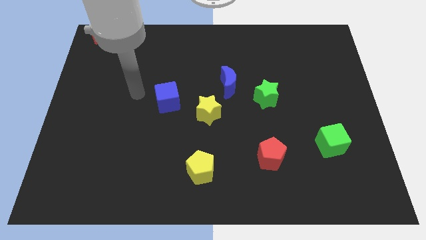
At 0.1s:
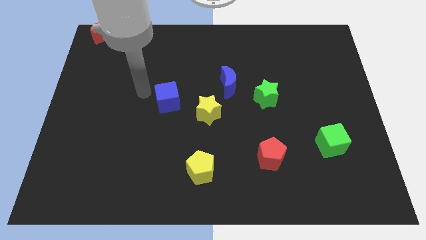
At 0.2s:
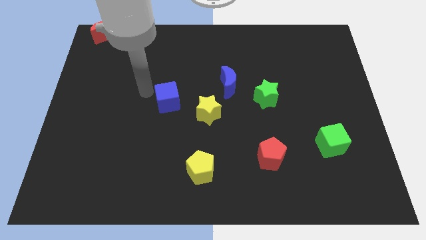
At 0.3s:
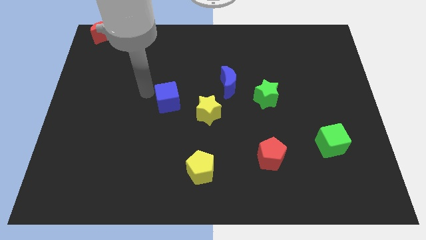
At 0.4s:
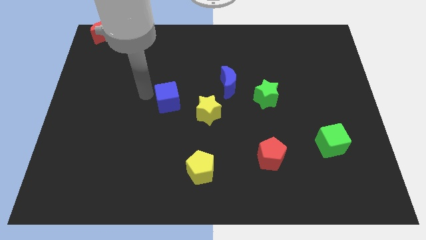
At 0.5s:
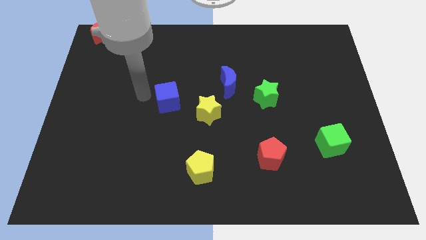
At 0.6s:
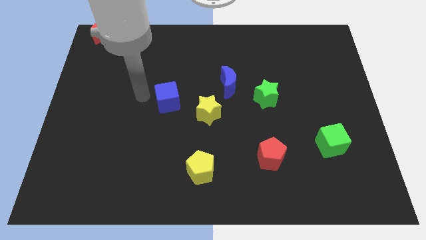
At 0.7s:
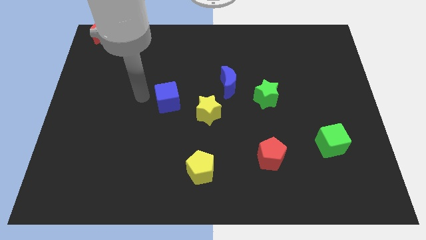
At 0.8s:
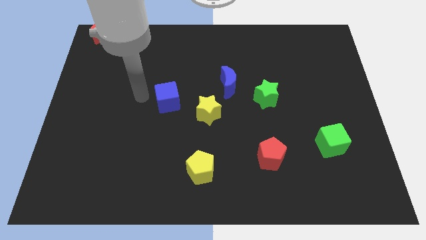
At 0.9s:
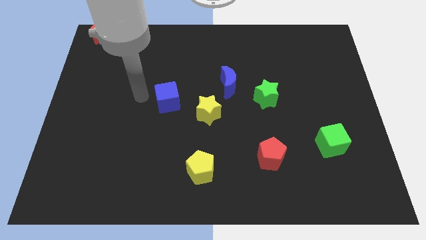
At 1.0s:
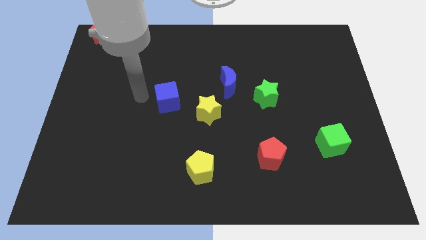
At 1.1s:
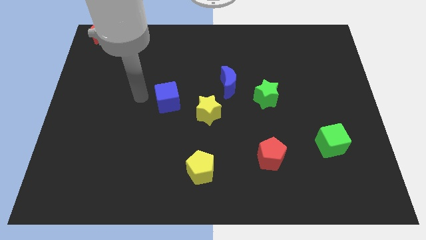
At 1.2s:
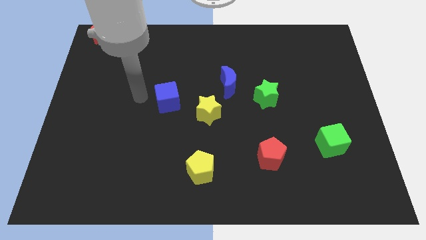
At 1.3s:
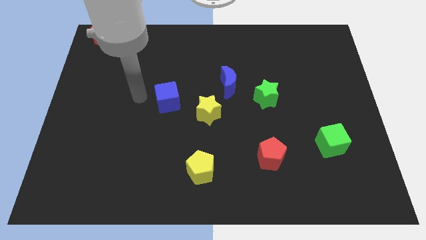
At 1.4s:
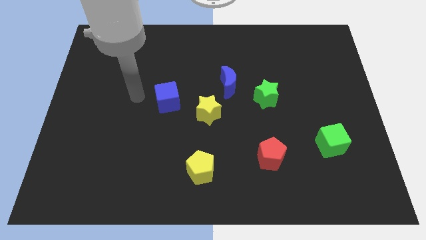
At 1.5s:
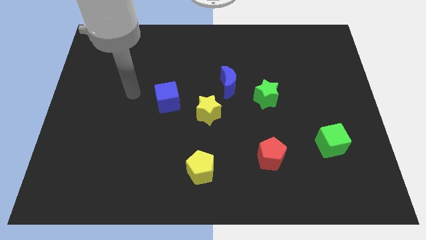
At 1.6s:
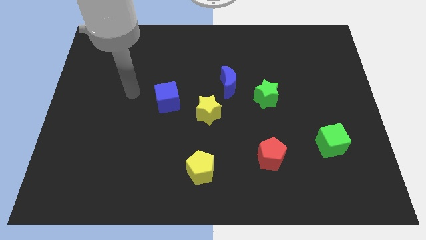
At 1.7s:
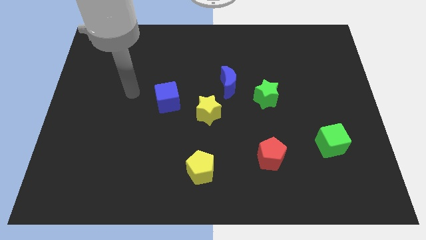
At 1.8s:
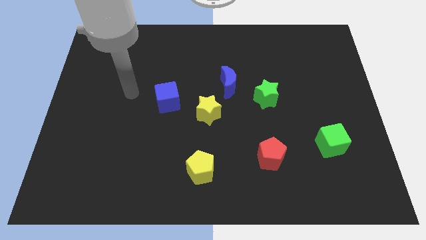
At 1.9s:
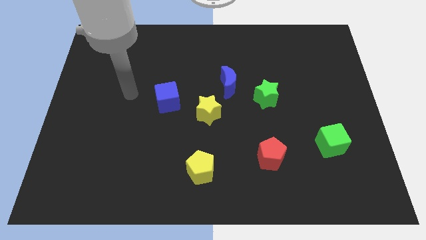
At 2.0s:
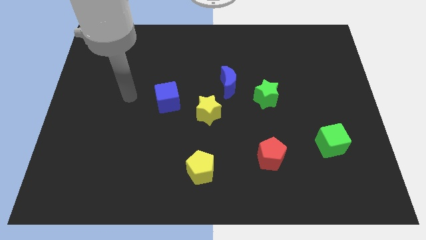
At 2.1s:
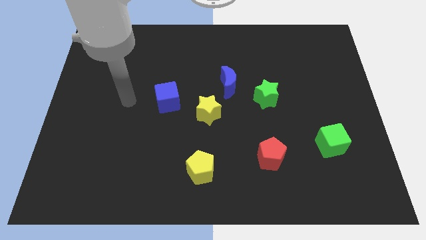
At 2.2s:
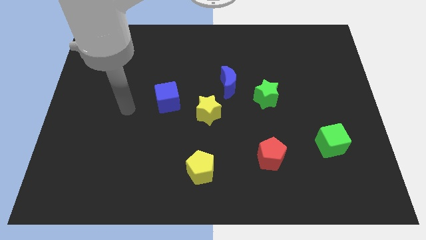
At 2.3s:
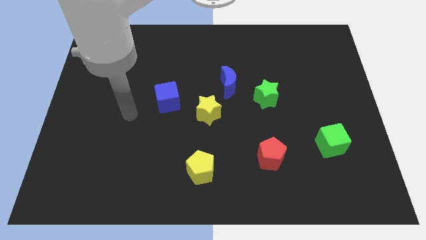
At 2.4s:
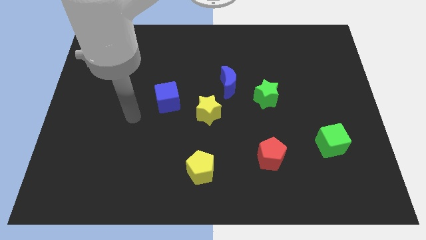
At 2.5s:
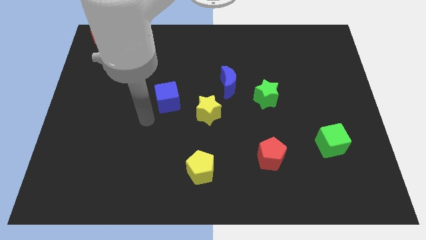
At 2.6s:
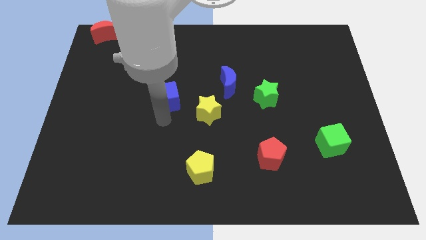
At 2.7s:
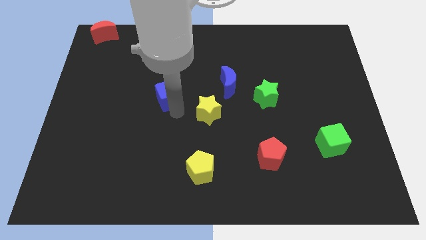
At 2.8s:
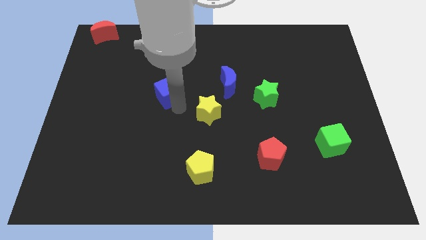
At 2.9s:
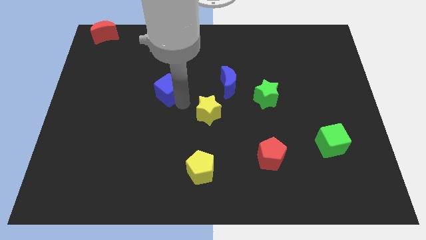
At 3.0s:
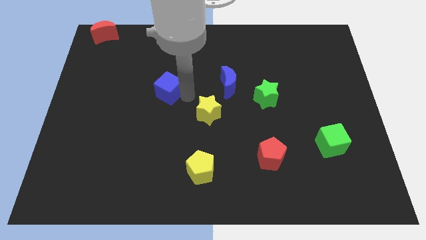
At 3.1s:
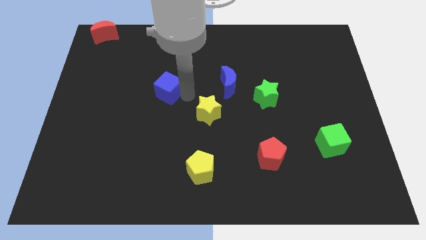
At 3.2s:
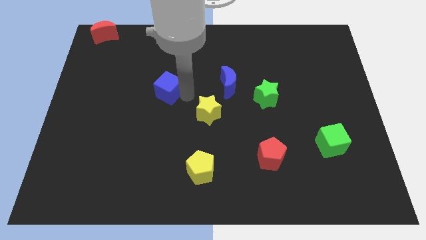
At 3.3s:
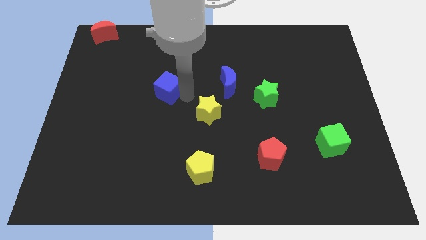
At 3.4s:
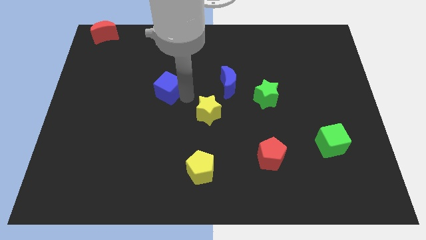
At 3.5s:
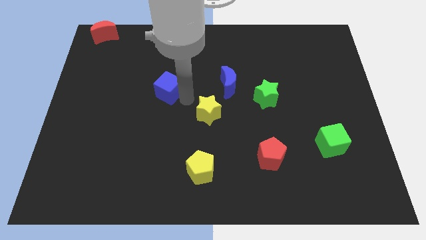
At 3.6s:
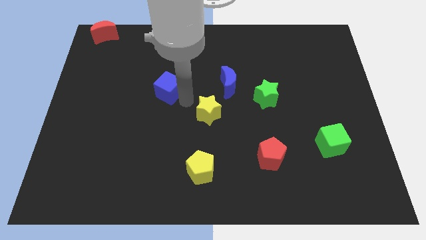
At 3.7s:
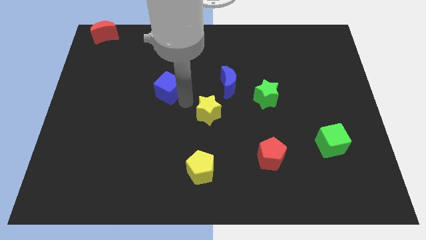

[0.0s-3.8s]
push the blue cube to the top left of the yellow star

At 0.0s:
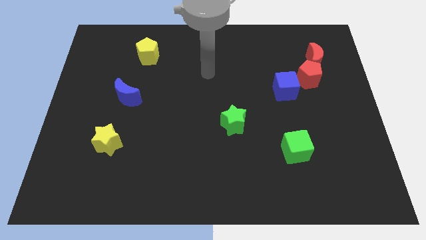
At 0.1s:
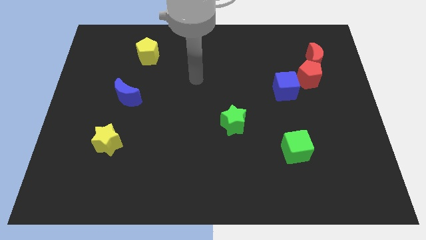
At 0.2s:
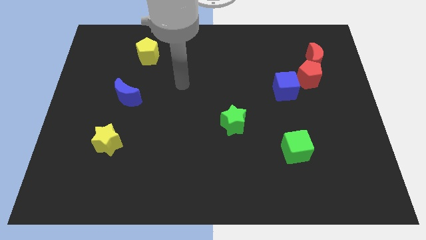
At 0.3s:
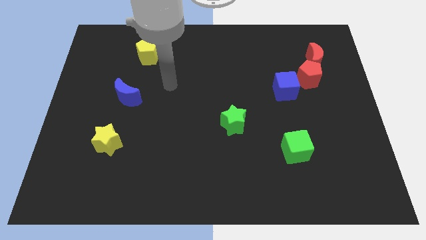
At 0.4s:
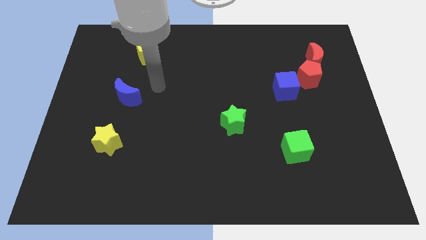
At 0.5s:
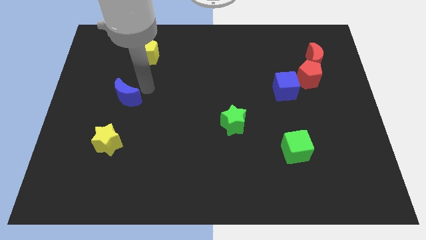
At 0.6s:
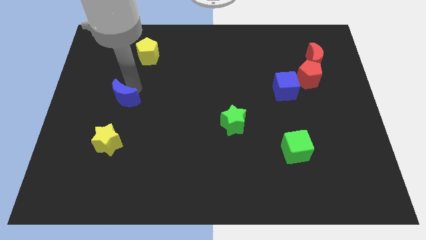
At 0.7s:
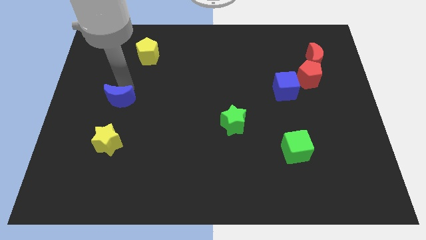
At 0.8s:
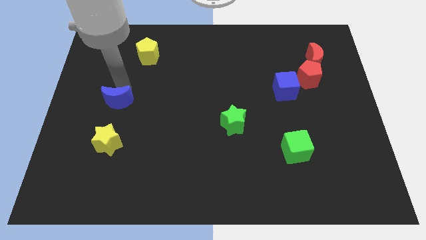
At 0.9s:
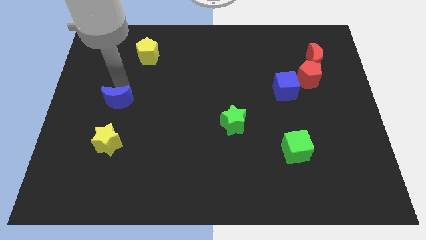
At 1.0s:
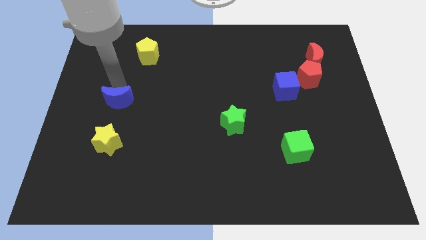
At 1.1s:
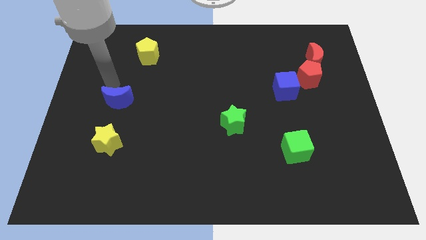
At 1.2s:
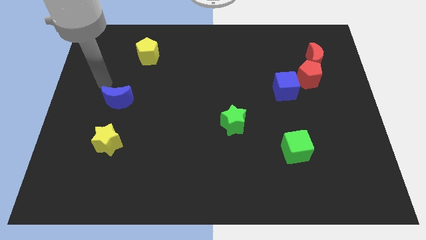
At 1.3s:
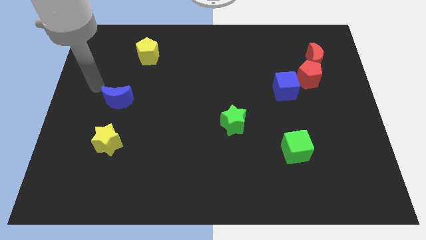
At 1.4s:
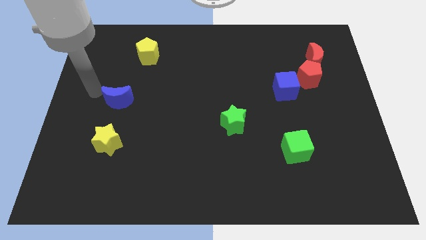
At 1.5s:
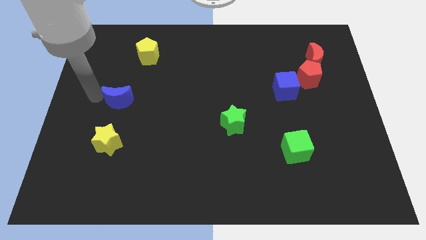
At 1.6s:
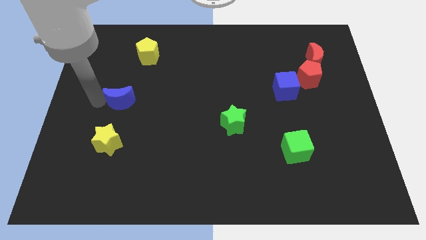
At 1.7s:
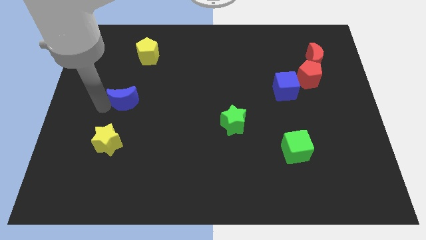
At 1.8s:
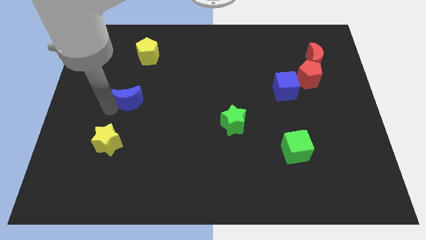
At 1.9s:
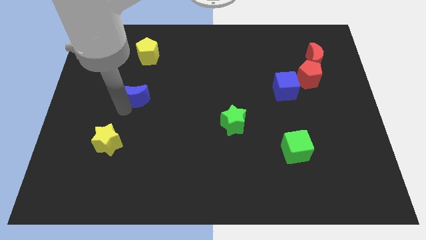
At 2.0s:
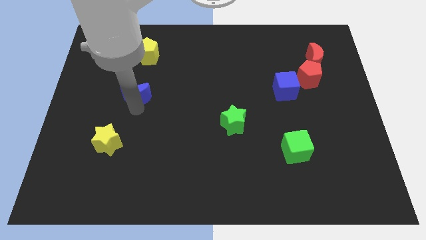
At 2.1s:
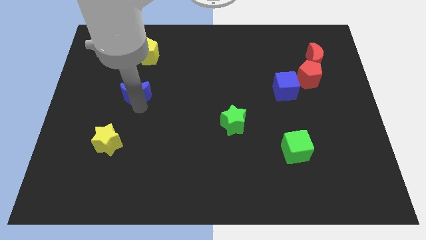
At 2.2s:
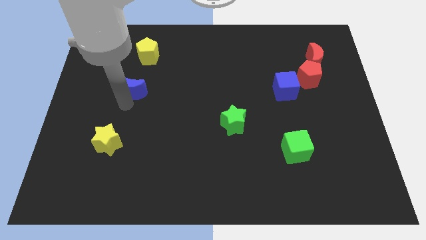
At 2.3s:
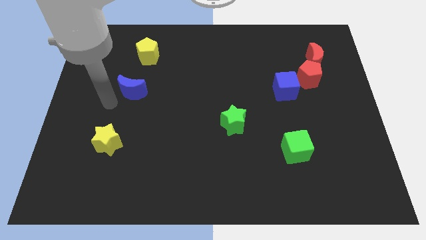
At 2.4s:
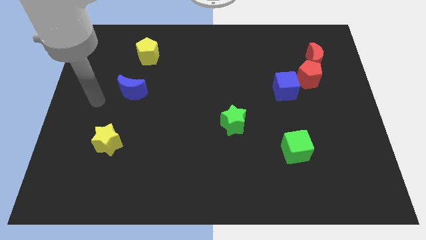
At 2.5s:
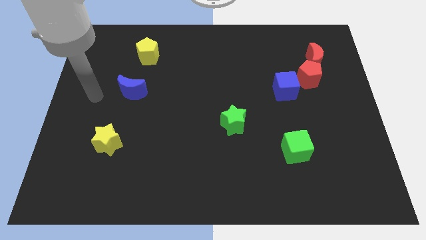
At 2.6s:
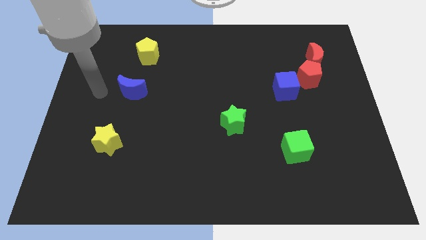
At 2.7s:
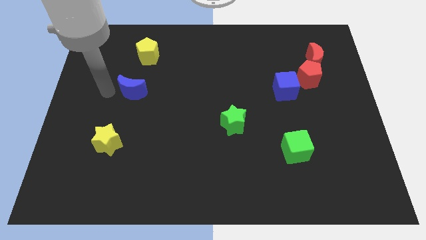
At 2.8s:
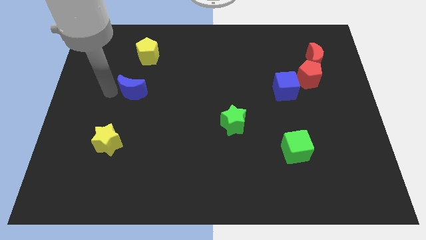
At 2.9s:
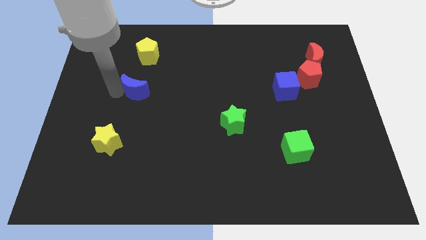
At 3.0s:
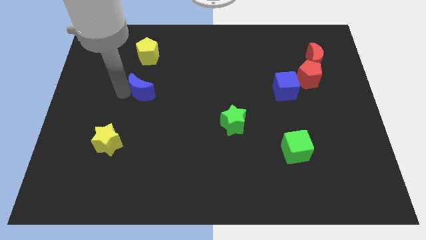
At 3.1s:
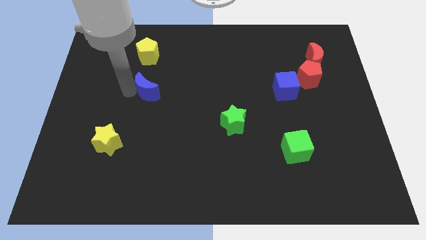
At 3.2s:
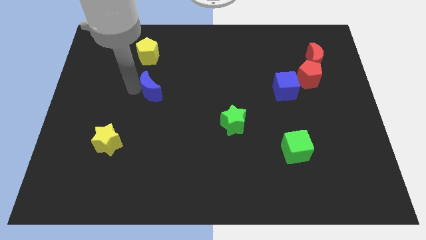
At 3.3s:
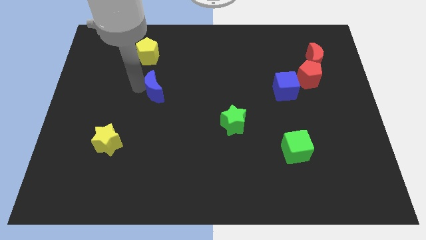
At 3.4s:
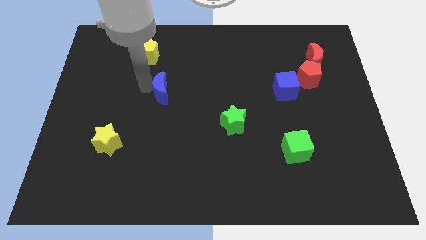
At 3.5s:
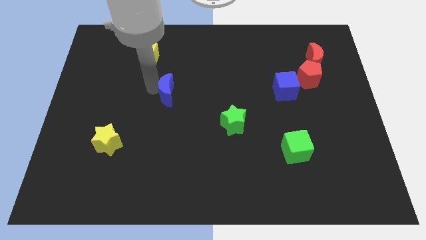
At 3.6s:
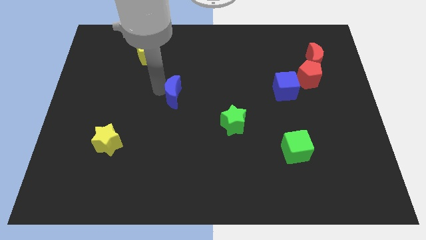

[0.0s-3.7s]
slide the blue moon diagonally bottom right to the yellow pentagon

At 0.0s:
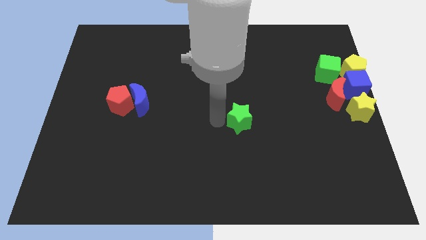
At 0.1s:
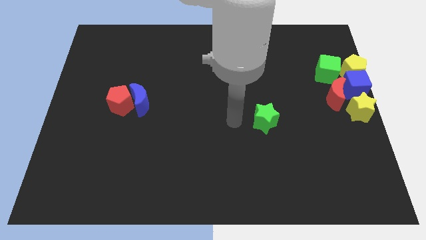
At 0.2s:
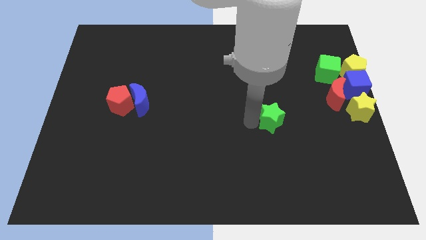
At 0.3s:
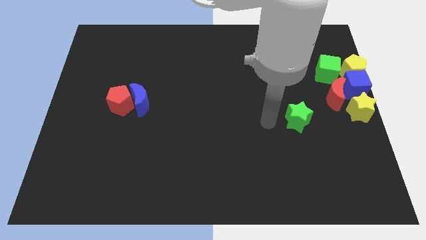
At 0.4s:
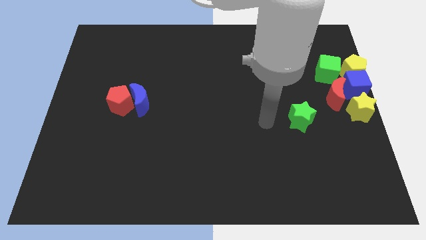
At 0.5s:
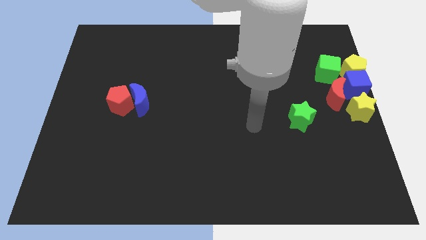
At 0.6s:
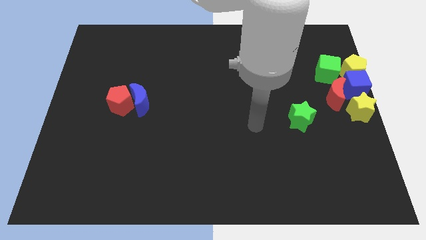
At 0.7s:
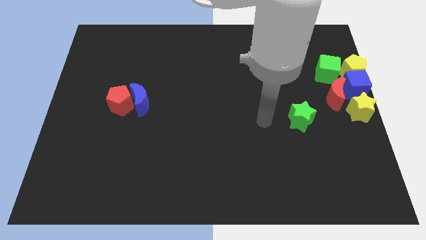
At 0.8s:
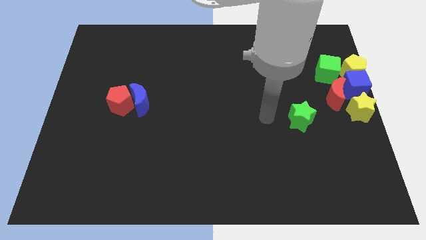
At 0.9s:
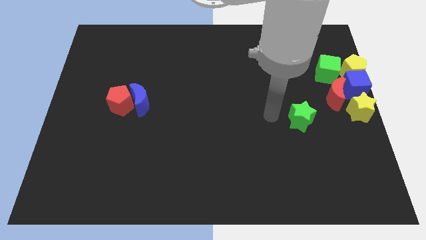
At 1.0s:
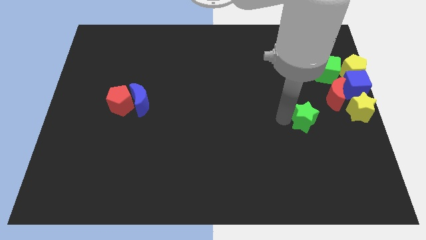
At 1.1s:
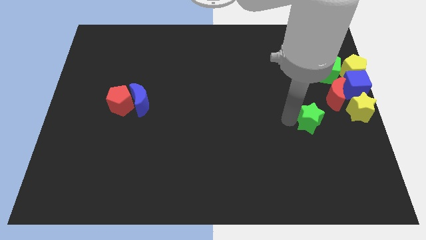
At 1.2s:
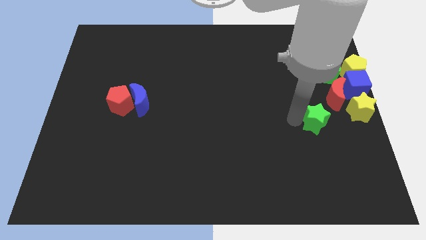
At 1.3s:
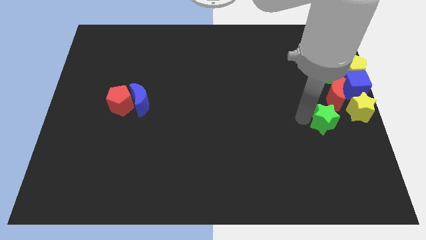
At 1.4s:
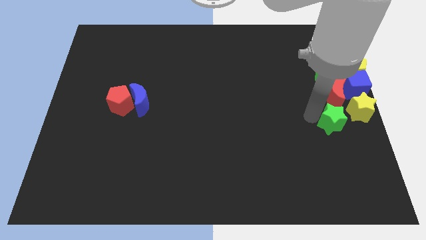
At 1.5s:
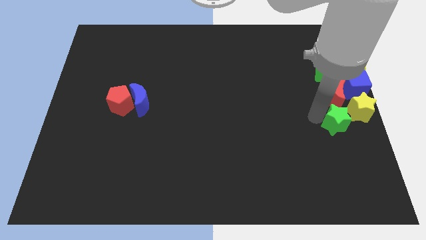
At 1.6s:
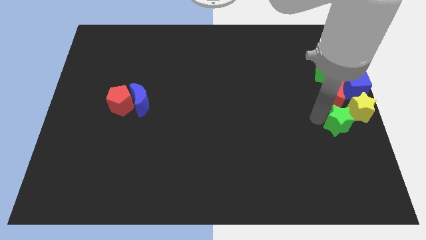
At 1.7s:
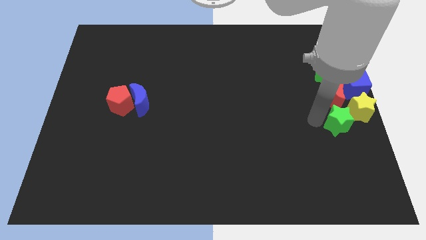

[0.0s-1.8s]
place green star diagonal to yellow star
